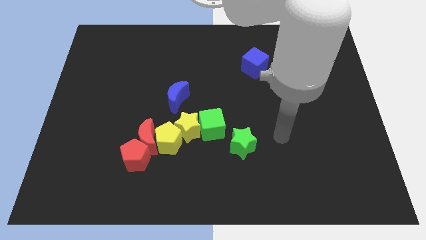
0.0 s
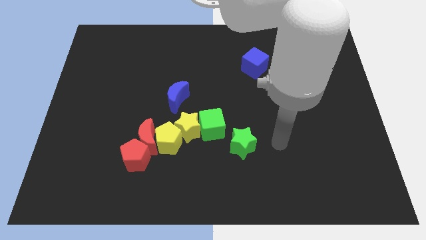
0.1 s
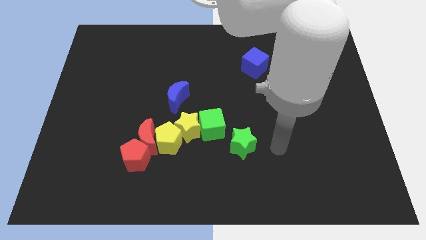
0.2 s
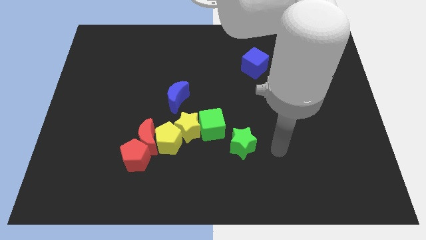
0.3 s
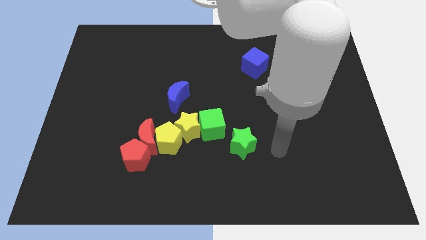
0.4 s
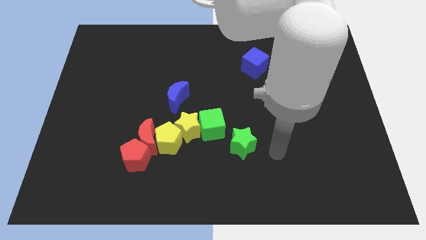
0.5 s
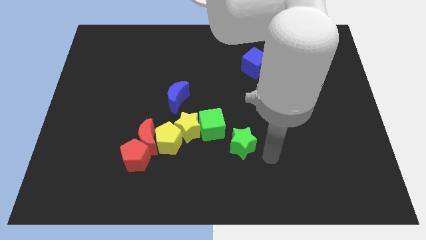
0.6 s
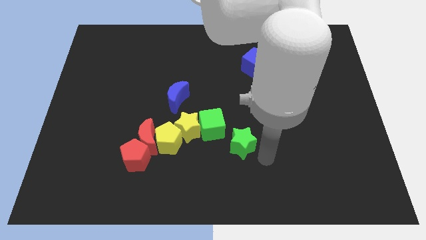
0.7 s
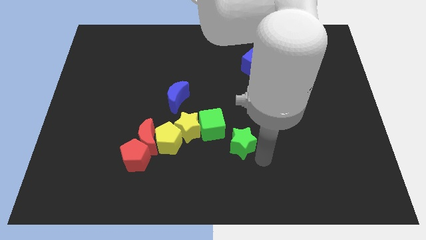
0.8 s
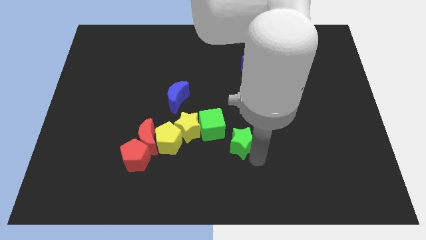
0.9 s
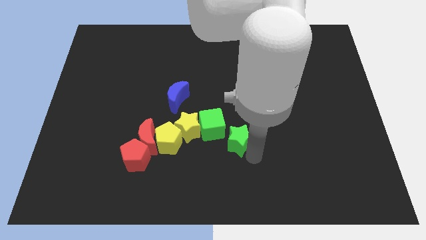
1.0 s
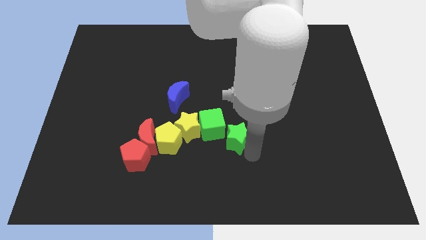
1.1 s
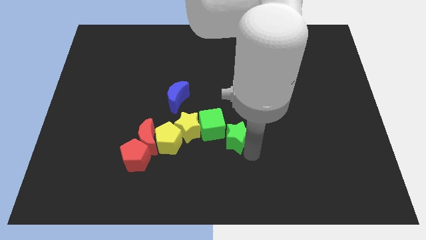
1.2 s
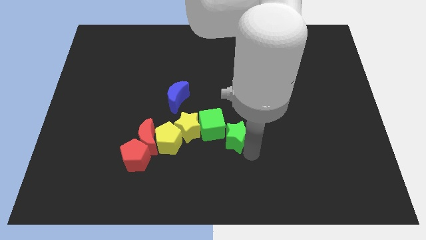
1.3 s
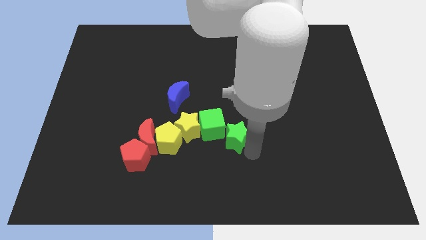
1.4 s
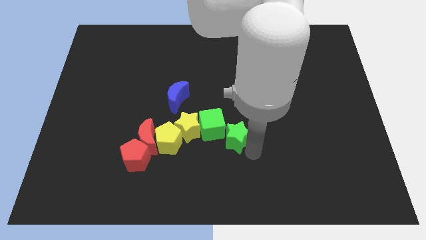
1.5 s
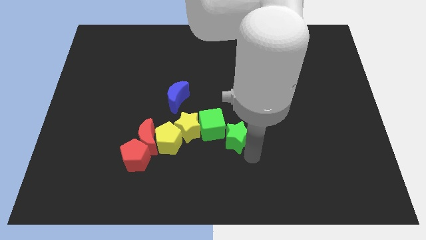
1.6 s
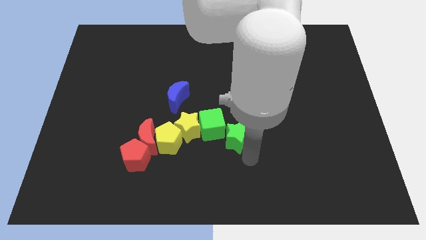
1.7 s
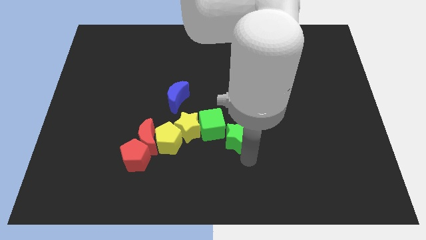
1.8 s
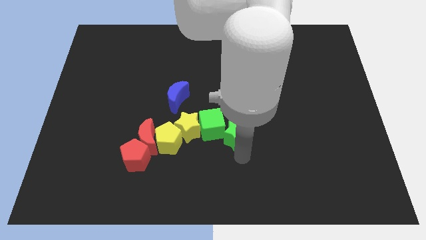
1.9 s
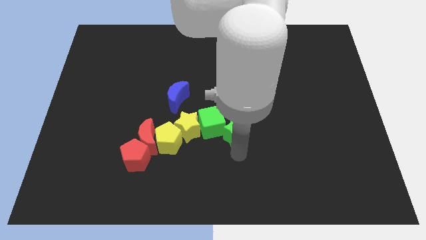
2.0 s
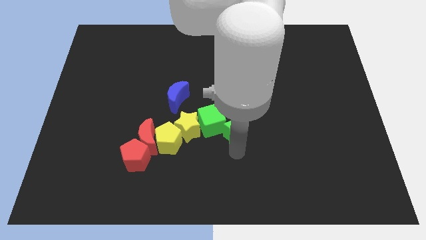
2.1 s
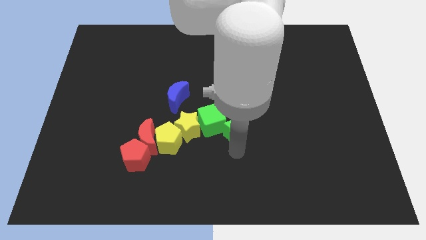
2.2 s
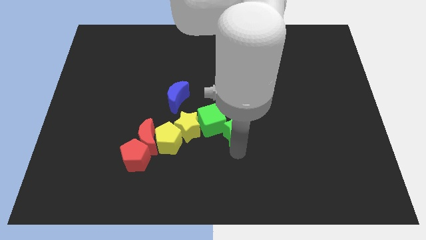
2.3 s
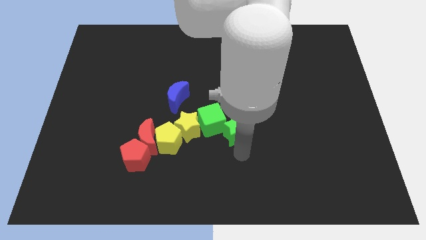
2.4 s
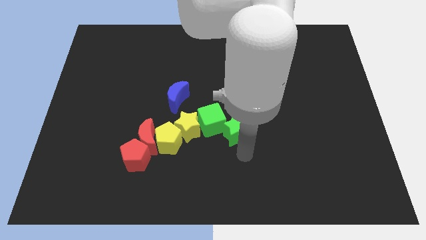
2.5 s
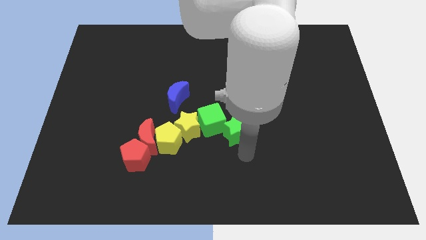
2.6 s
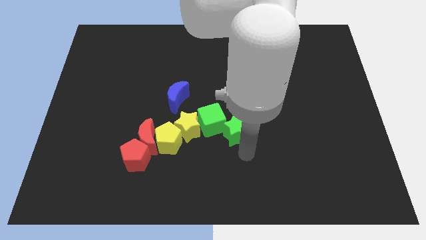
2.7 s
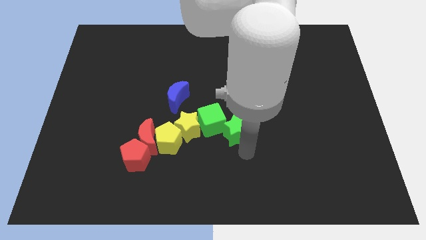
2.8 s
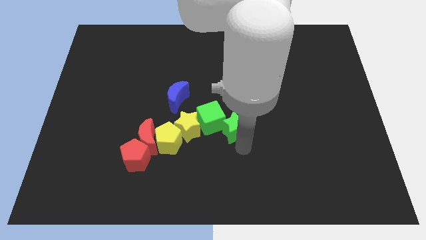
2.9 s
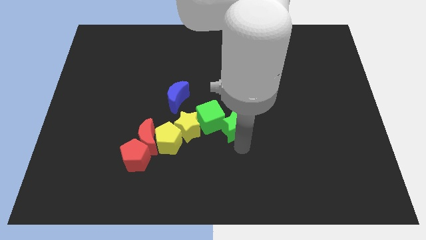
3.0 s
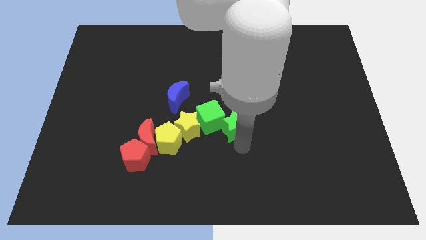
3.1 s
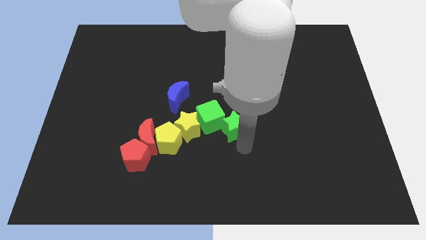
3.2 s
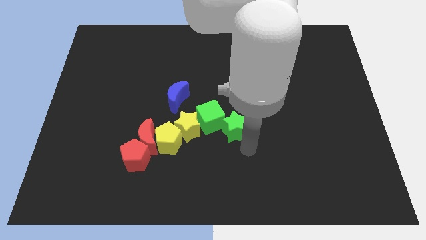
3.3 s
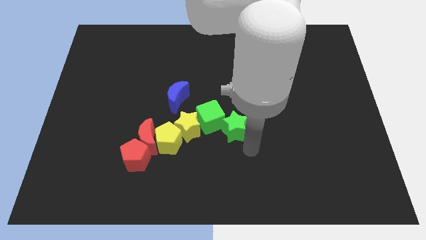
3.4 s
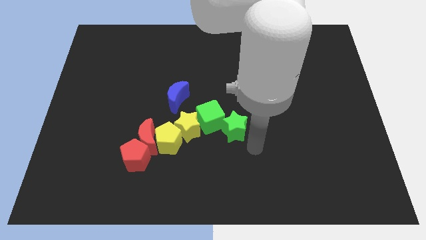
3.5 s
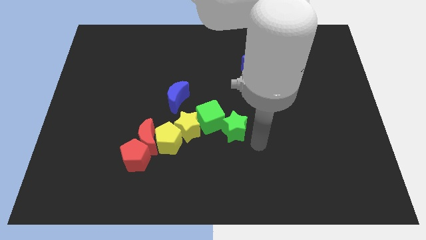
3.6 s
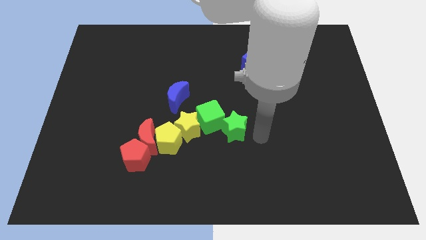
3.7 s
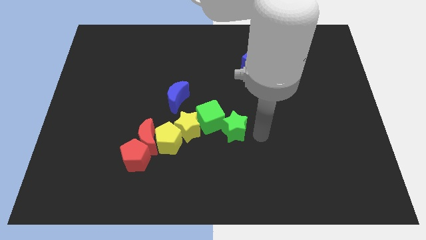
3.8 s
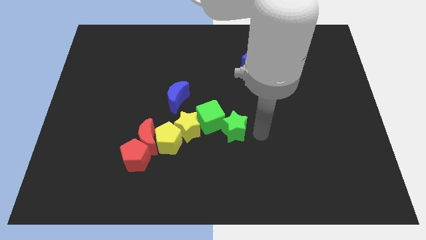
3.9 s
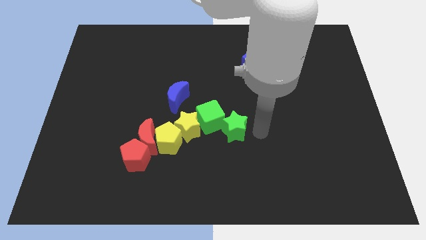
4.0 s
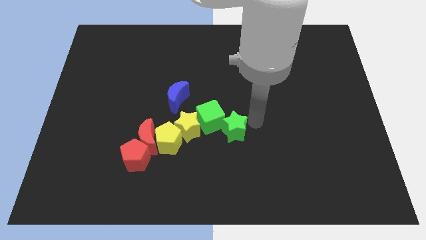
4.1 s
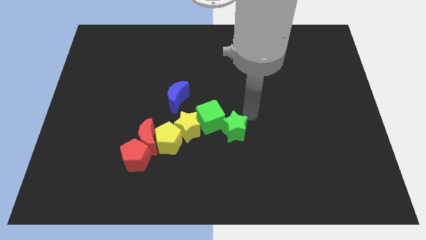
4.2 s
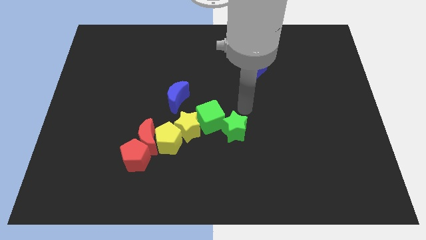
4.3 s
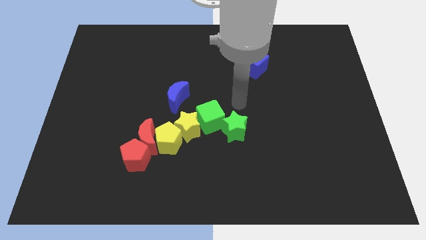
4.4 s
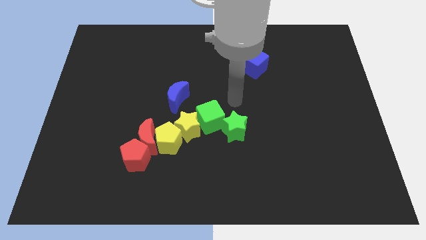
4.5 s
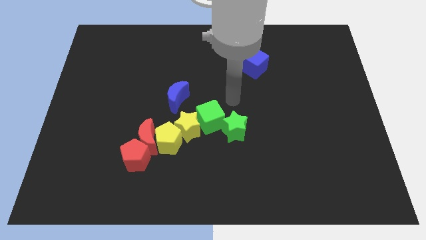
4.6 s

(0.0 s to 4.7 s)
push the green star slightly upwards

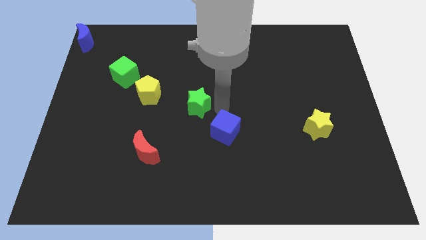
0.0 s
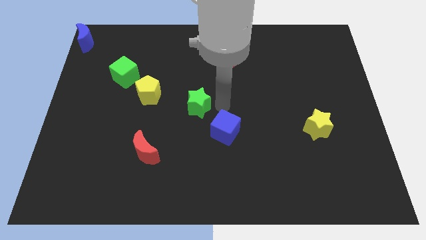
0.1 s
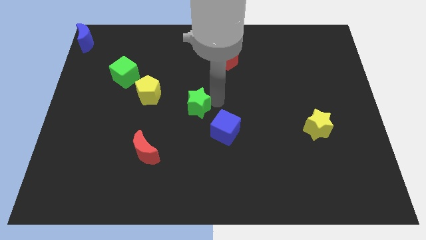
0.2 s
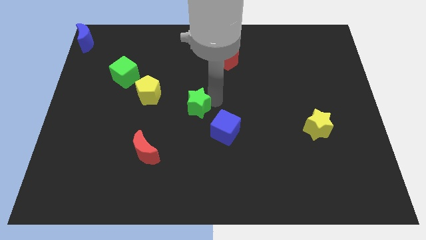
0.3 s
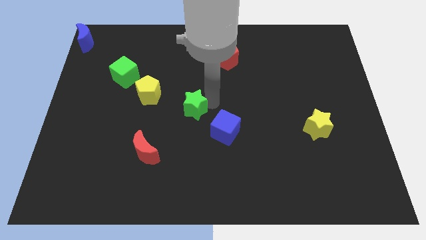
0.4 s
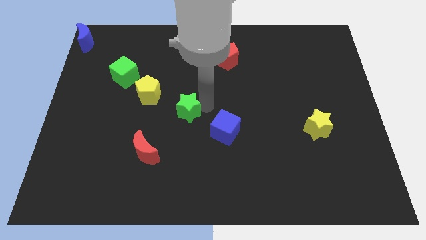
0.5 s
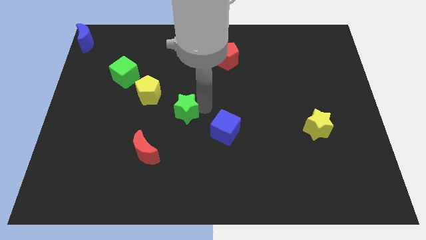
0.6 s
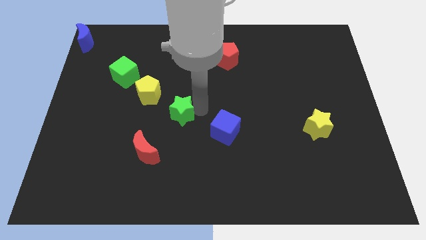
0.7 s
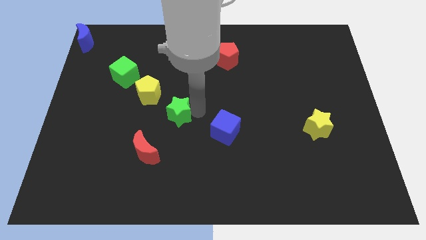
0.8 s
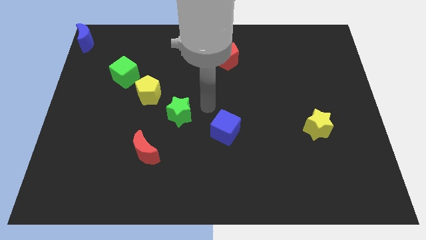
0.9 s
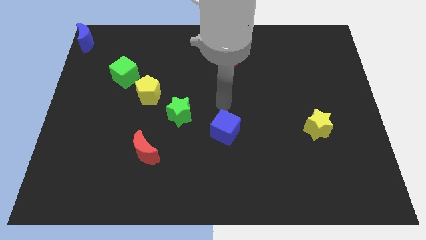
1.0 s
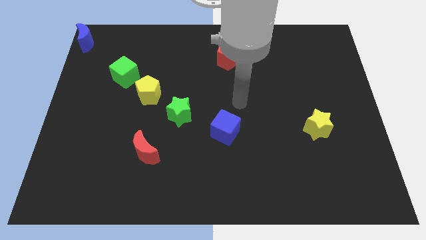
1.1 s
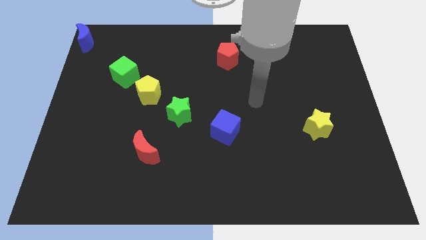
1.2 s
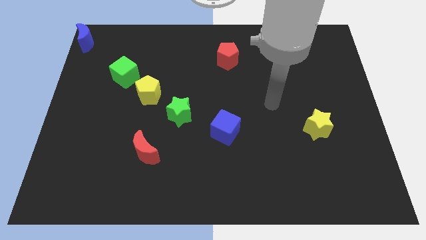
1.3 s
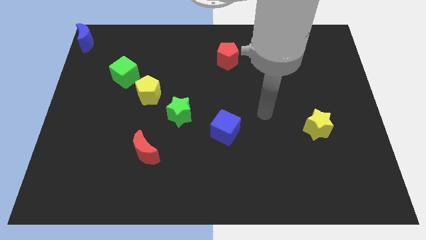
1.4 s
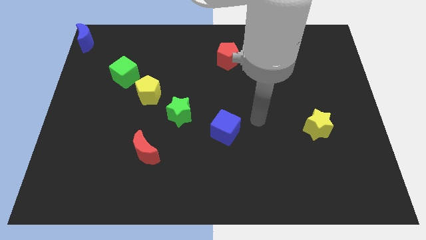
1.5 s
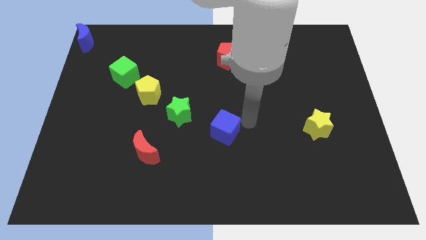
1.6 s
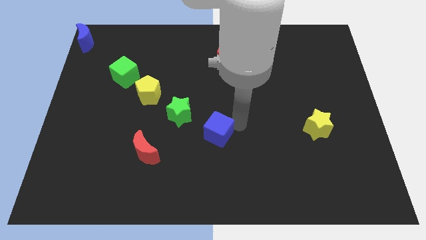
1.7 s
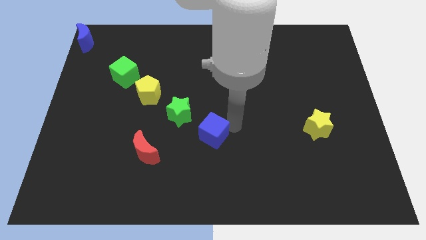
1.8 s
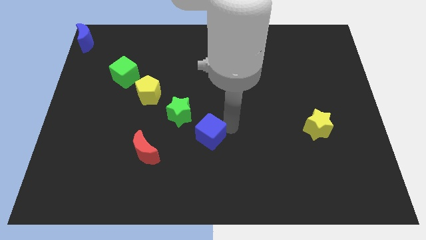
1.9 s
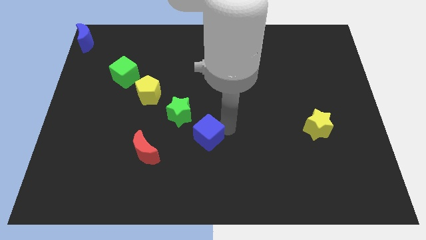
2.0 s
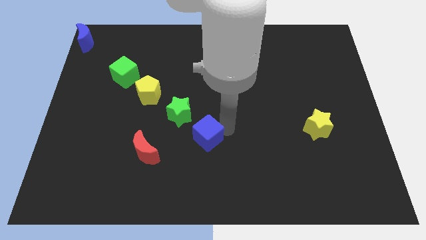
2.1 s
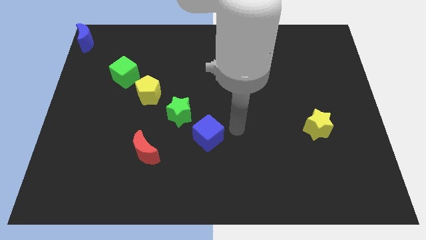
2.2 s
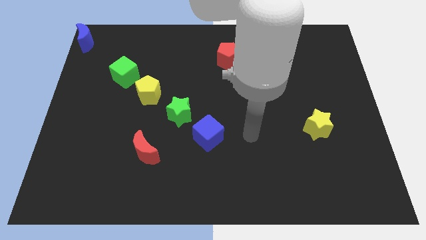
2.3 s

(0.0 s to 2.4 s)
adjust the green star in a diagonal line

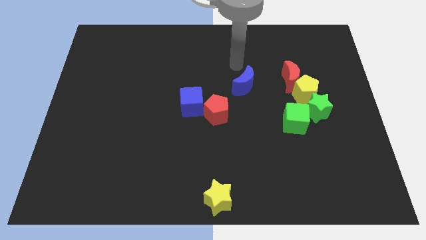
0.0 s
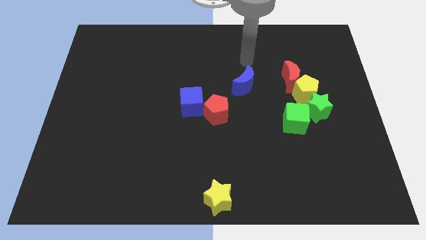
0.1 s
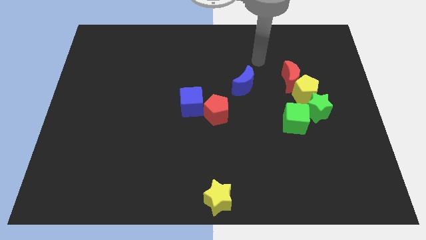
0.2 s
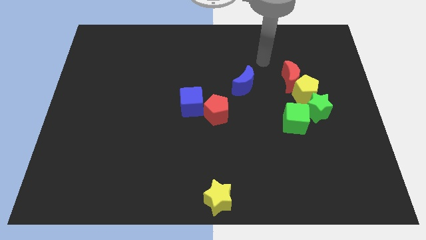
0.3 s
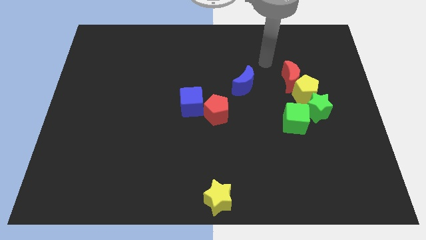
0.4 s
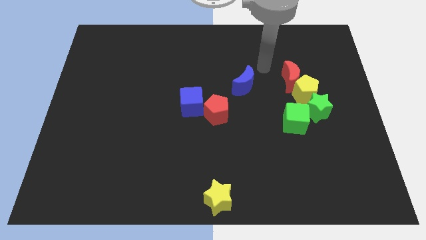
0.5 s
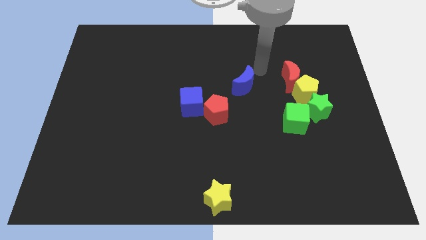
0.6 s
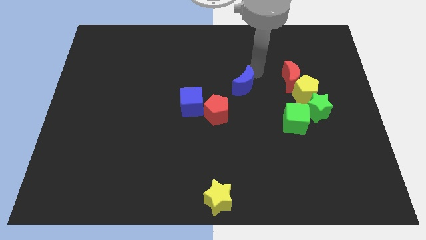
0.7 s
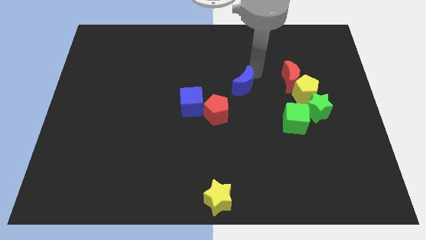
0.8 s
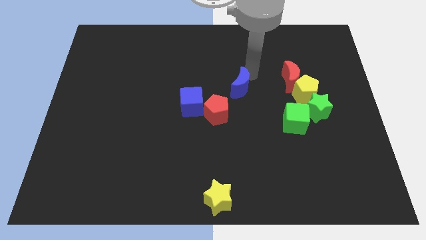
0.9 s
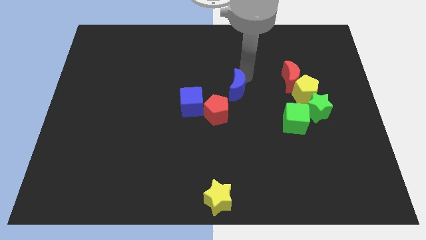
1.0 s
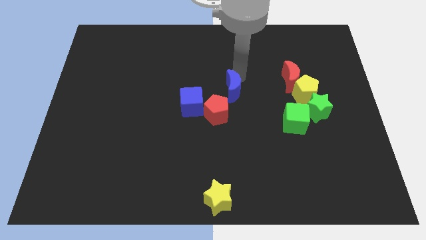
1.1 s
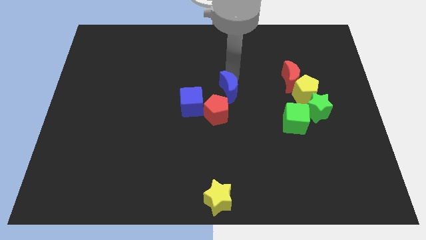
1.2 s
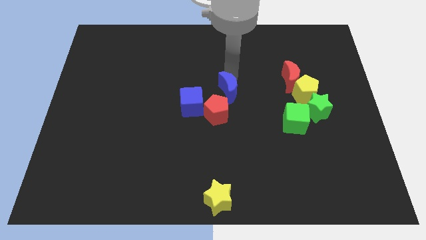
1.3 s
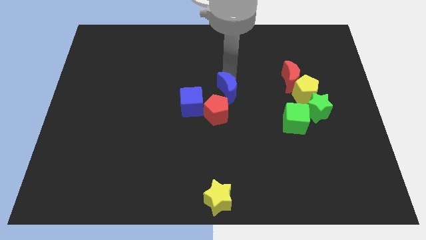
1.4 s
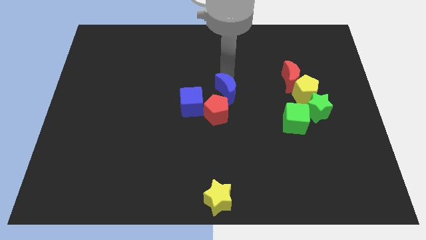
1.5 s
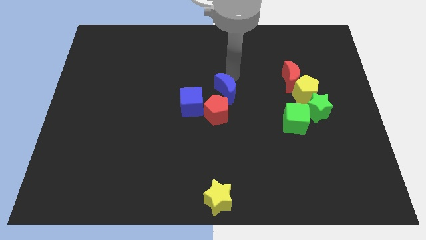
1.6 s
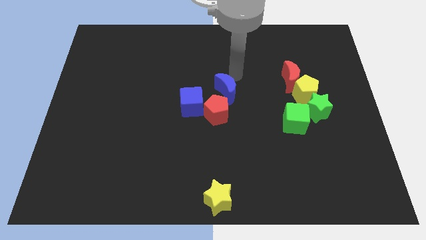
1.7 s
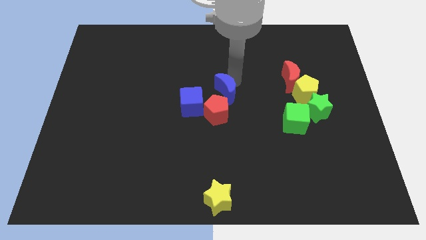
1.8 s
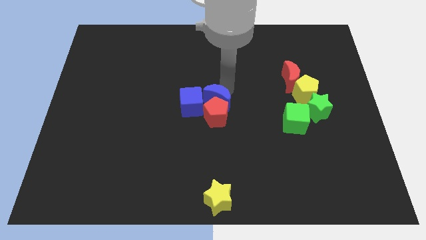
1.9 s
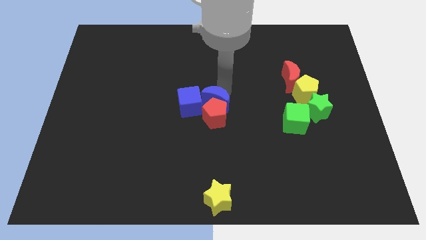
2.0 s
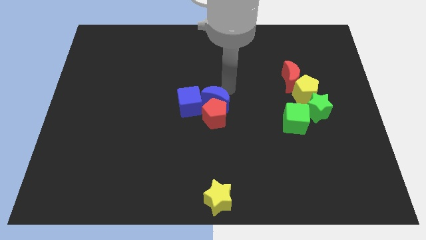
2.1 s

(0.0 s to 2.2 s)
place the blue moon to the top of the red pentagon
